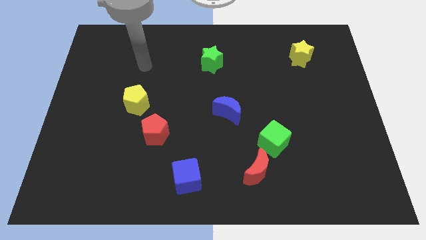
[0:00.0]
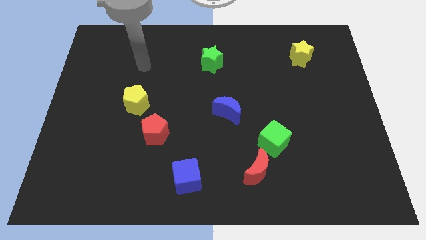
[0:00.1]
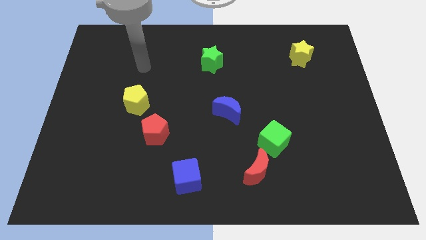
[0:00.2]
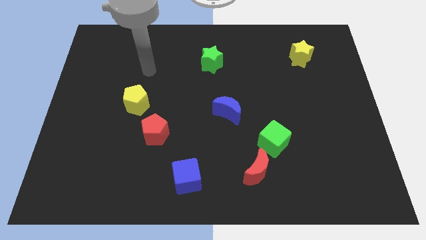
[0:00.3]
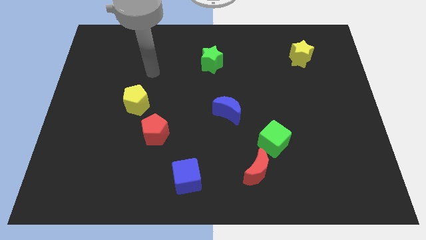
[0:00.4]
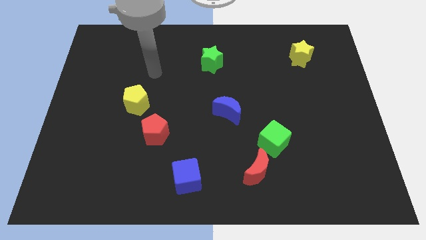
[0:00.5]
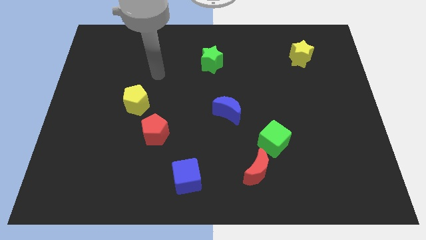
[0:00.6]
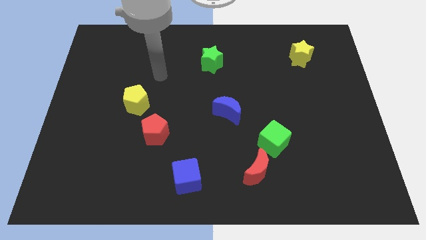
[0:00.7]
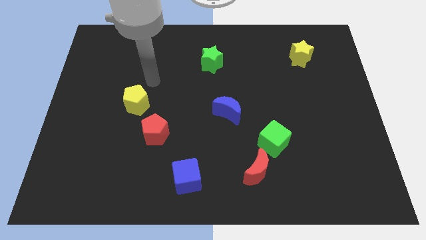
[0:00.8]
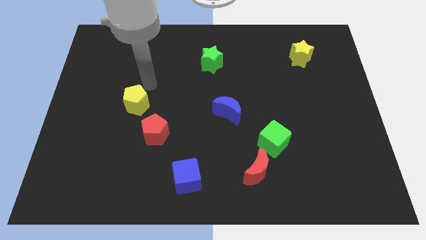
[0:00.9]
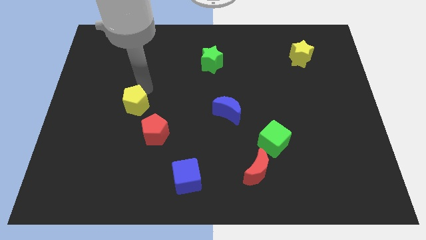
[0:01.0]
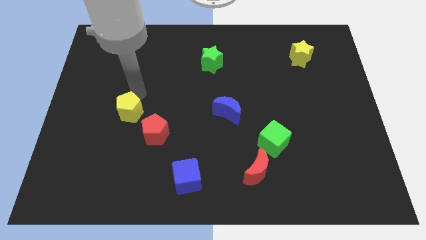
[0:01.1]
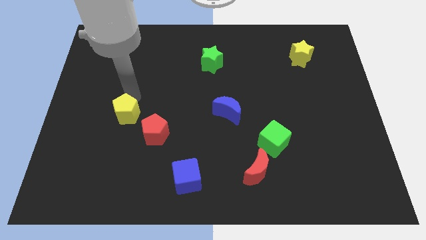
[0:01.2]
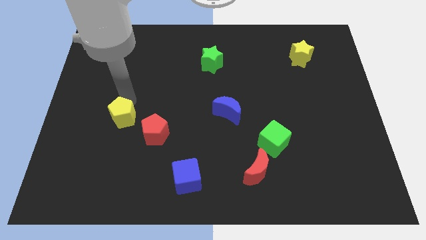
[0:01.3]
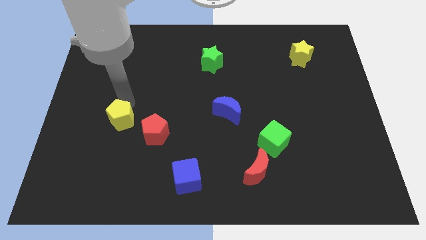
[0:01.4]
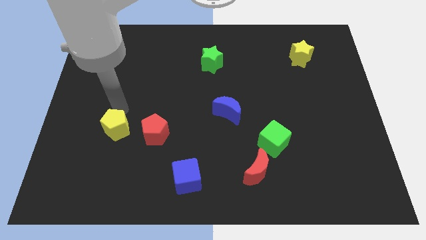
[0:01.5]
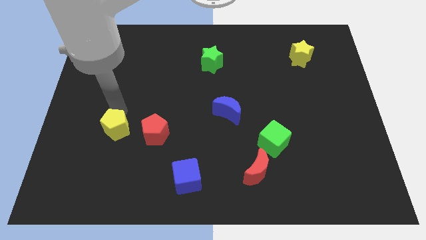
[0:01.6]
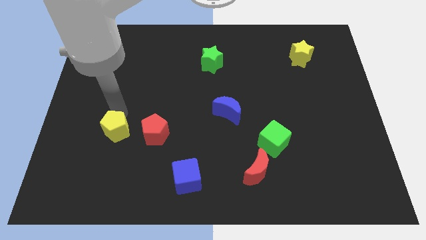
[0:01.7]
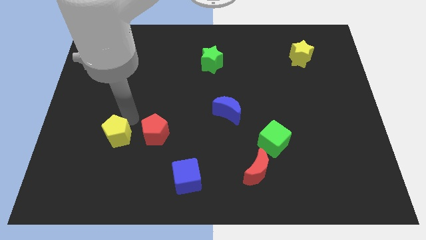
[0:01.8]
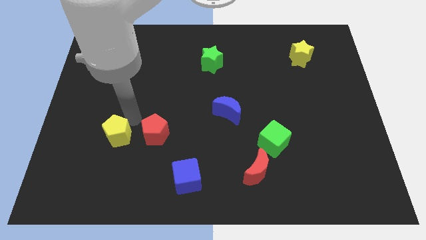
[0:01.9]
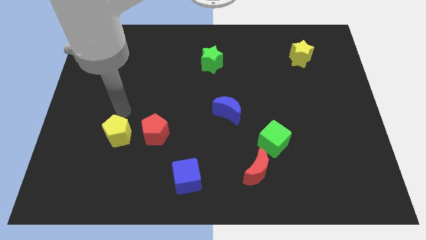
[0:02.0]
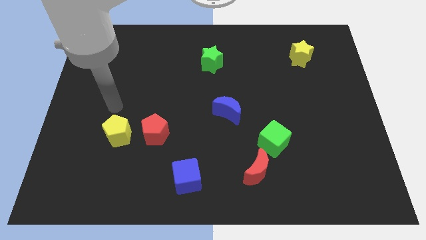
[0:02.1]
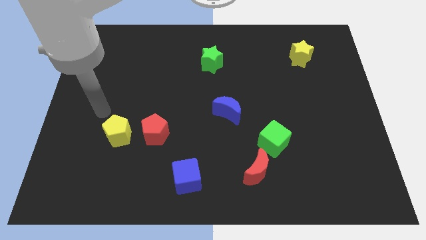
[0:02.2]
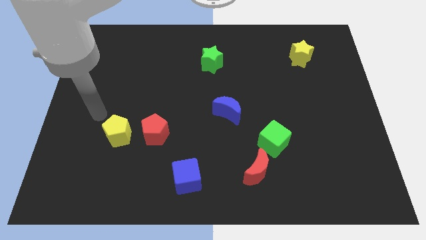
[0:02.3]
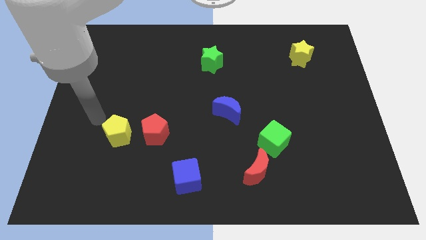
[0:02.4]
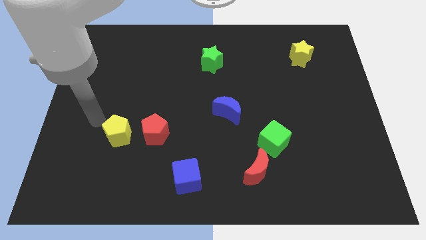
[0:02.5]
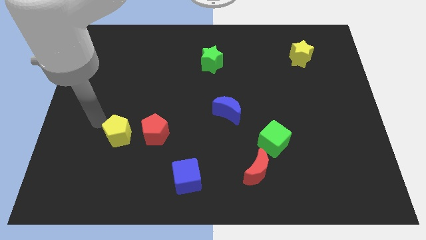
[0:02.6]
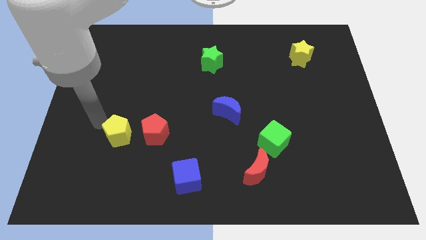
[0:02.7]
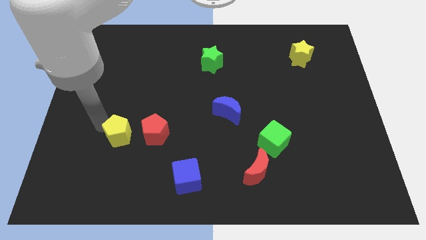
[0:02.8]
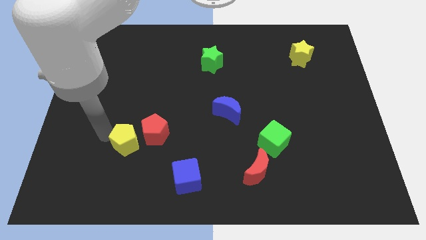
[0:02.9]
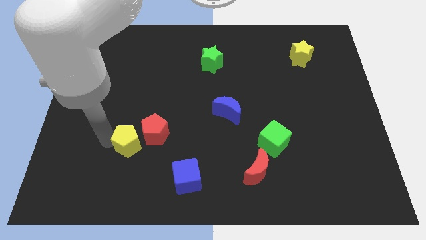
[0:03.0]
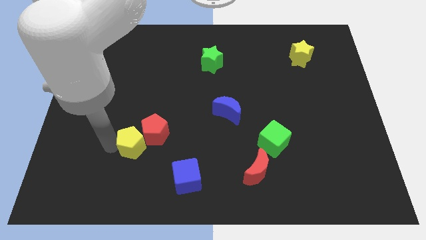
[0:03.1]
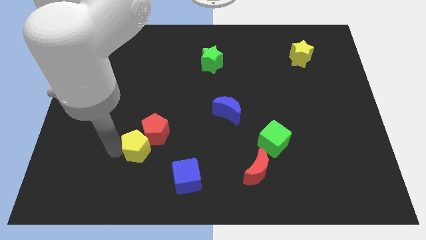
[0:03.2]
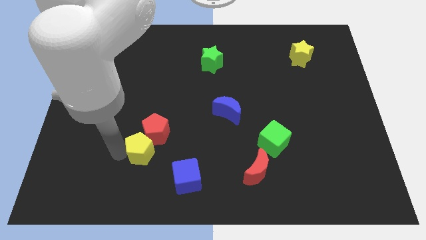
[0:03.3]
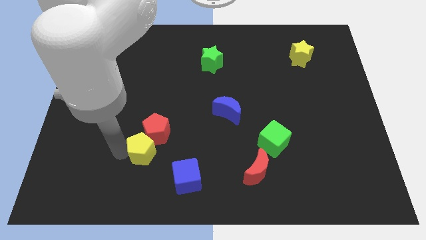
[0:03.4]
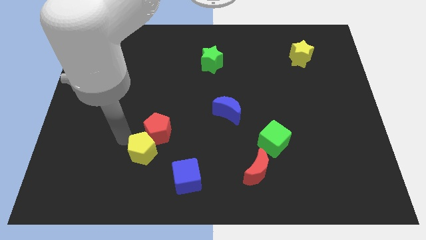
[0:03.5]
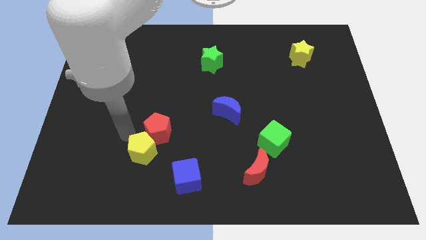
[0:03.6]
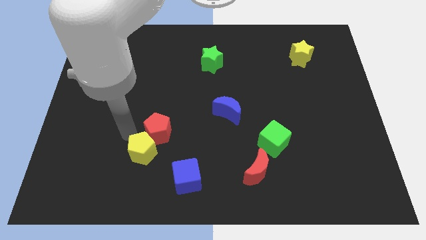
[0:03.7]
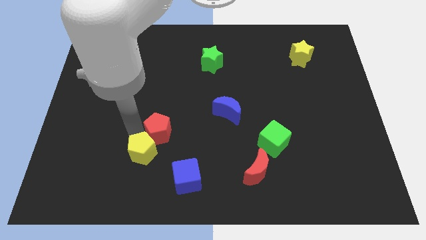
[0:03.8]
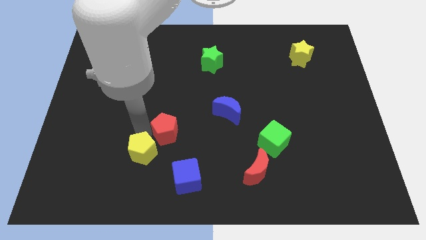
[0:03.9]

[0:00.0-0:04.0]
place the yellow pentagon below the red pentagon

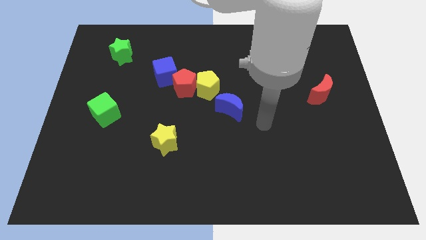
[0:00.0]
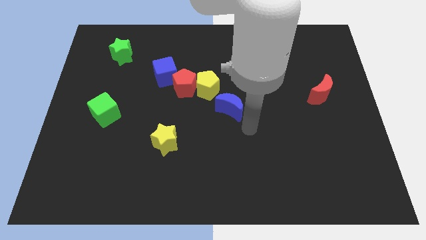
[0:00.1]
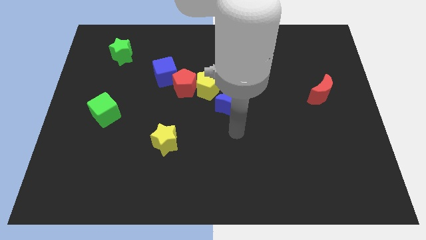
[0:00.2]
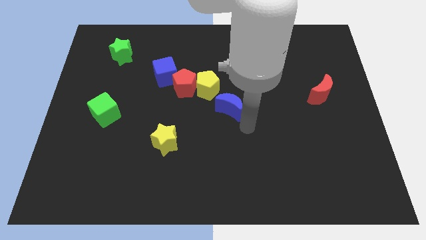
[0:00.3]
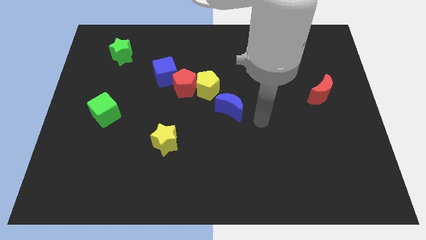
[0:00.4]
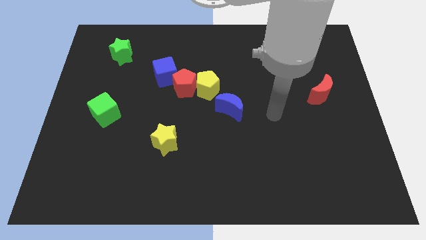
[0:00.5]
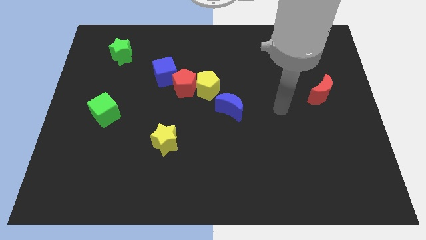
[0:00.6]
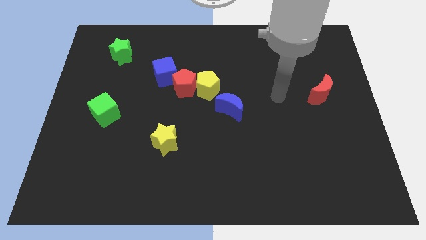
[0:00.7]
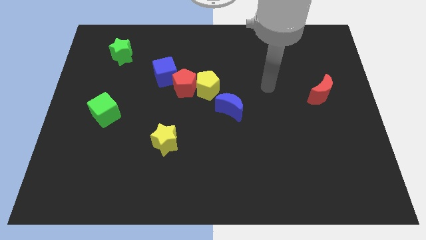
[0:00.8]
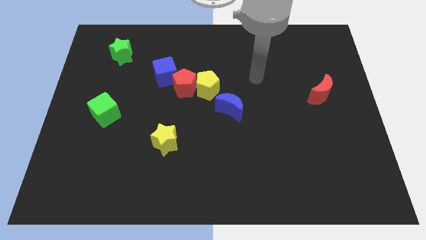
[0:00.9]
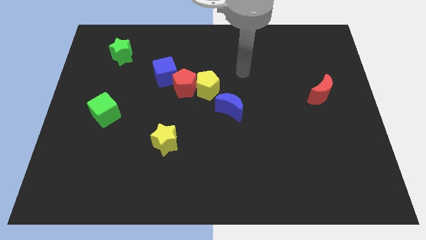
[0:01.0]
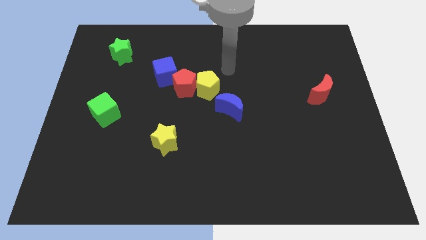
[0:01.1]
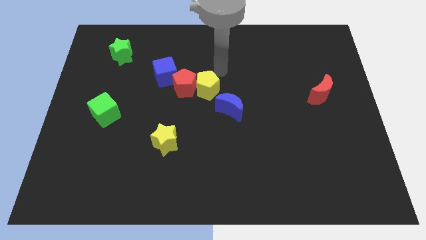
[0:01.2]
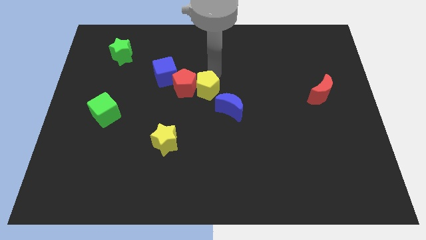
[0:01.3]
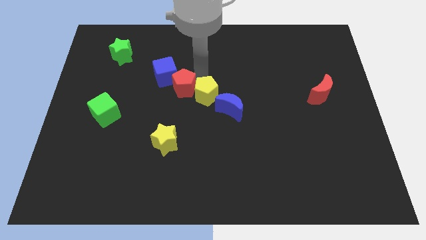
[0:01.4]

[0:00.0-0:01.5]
move your arm to the top of the yellow pentagon

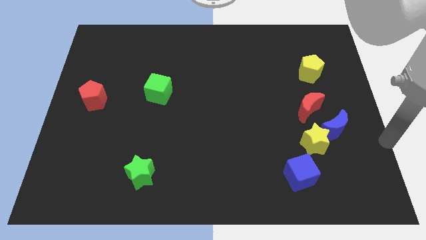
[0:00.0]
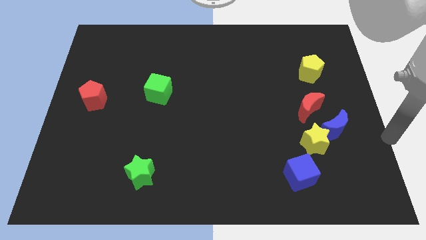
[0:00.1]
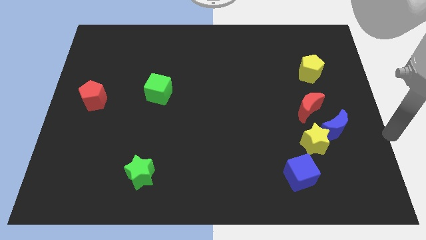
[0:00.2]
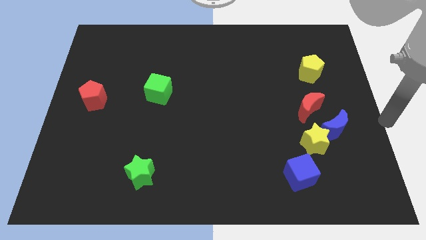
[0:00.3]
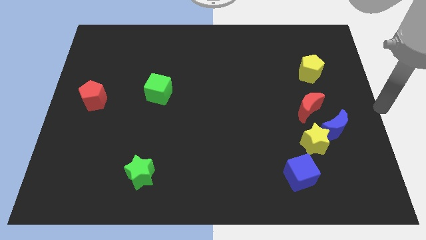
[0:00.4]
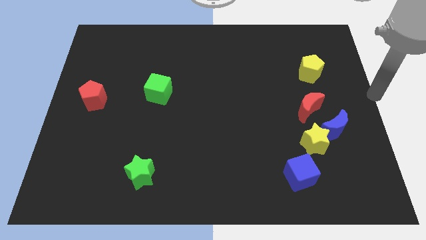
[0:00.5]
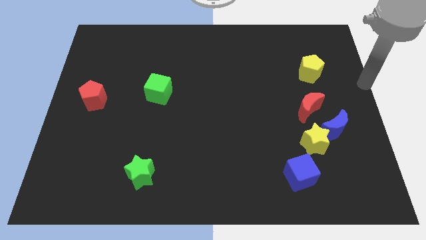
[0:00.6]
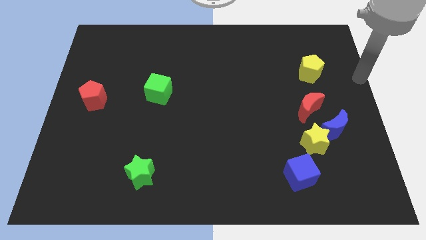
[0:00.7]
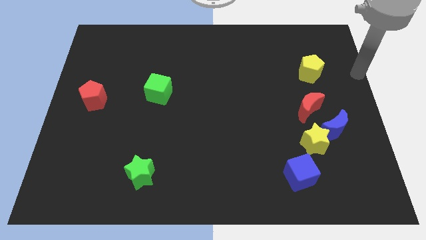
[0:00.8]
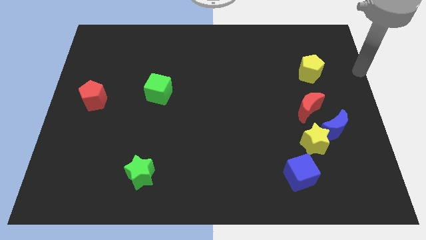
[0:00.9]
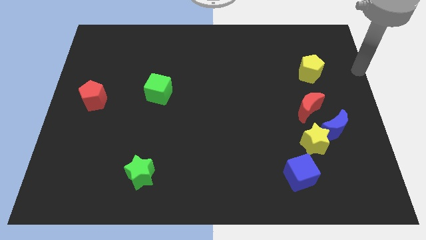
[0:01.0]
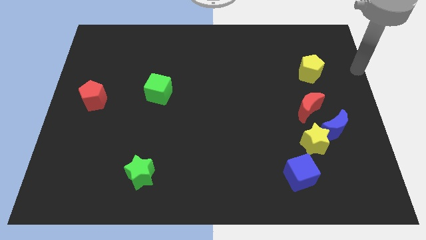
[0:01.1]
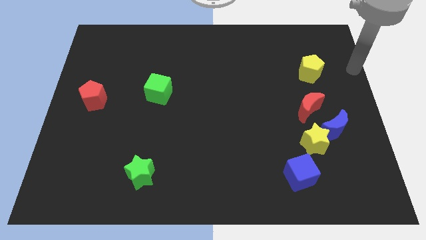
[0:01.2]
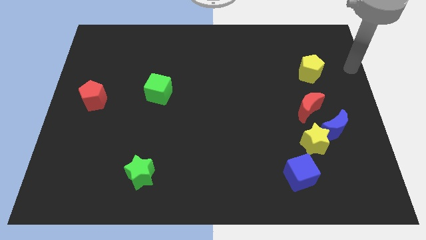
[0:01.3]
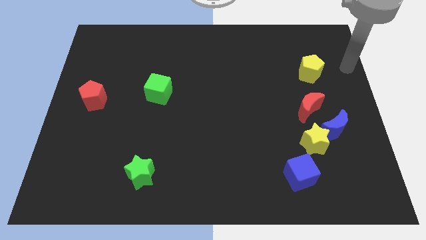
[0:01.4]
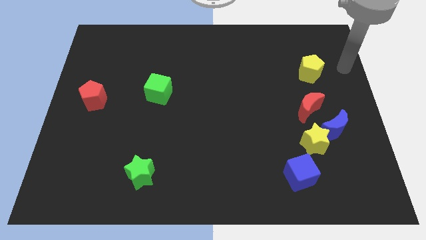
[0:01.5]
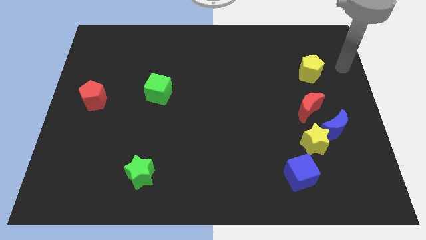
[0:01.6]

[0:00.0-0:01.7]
move your hand to the right of the yellow pentagon

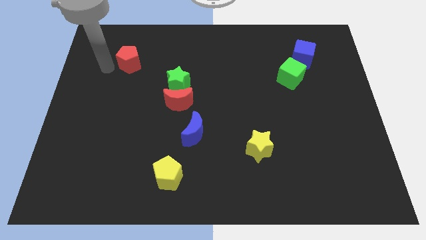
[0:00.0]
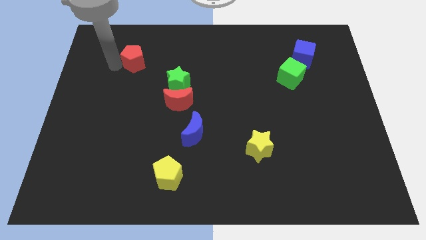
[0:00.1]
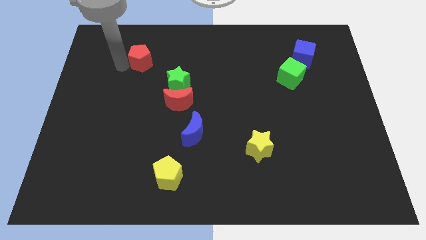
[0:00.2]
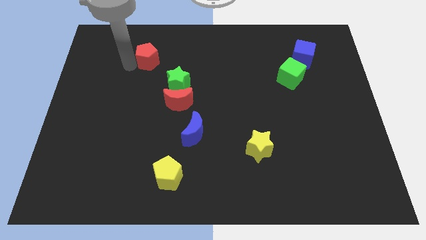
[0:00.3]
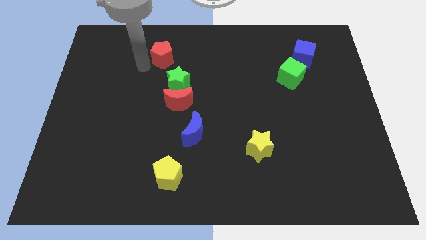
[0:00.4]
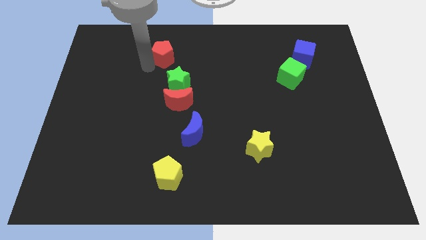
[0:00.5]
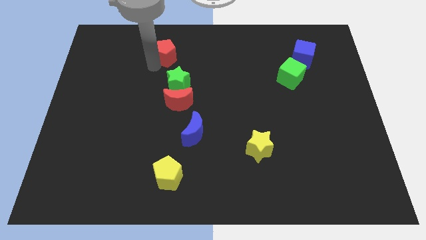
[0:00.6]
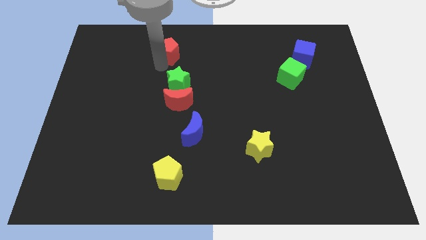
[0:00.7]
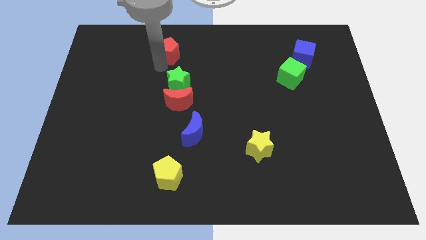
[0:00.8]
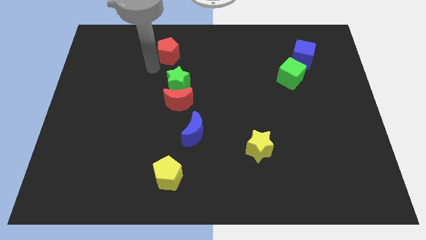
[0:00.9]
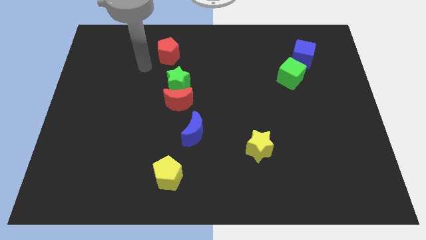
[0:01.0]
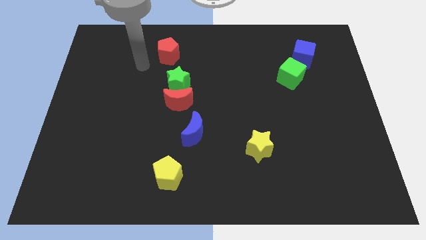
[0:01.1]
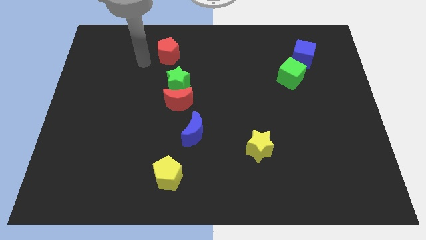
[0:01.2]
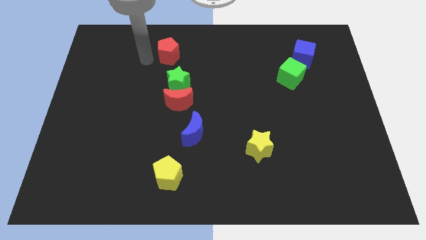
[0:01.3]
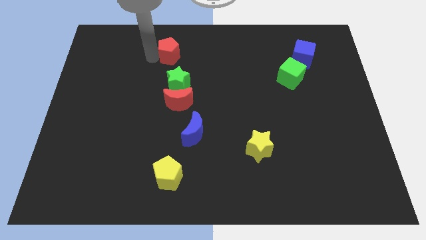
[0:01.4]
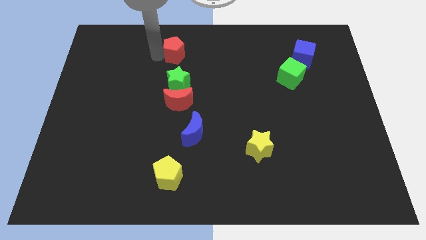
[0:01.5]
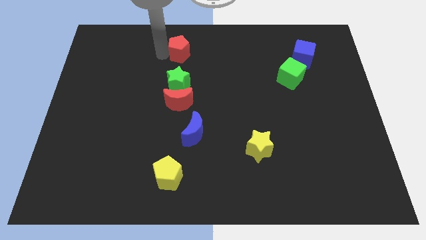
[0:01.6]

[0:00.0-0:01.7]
place the red pentagon above the green star
